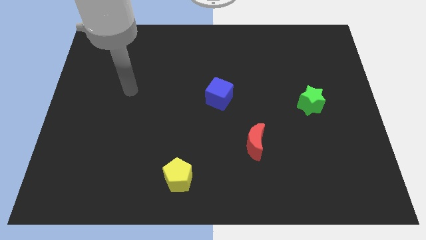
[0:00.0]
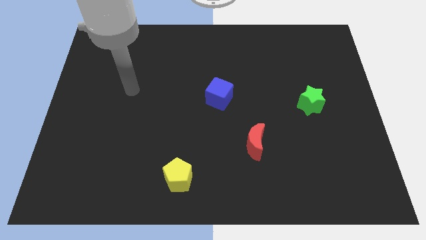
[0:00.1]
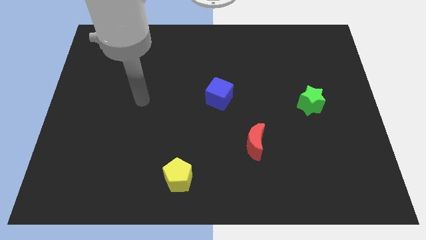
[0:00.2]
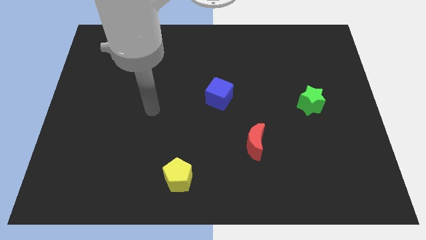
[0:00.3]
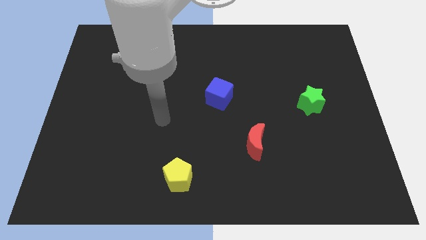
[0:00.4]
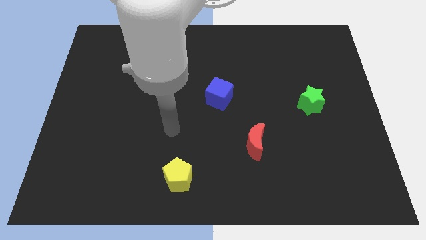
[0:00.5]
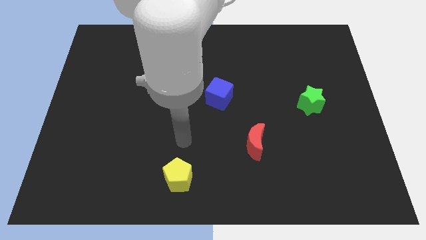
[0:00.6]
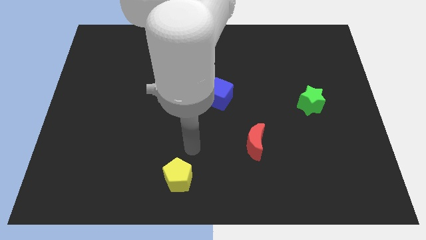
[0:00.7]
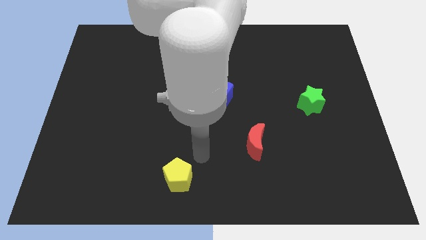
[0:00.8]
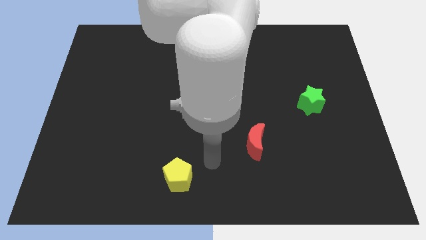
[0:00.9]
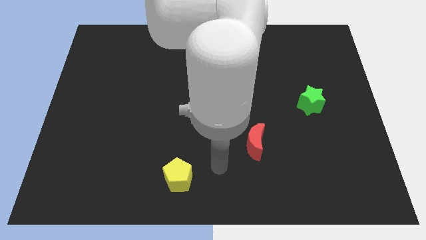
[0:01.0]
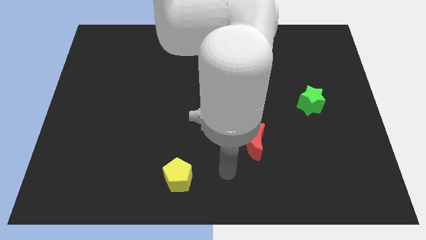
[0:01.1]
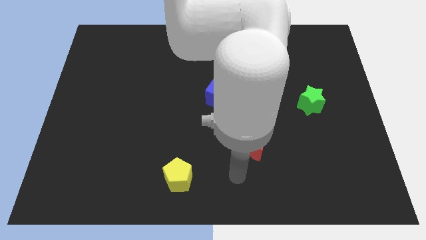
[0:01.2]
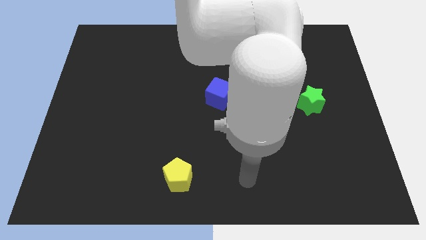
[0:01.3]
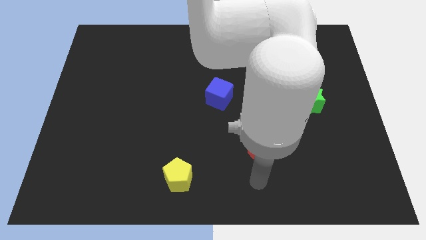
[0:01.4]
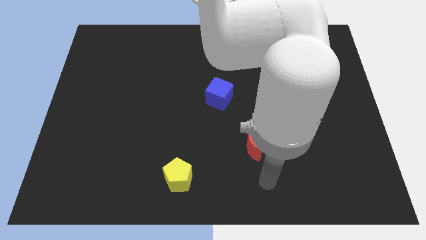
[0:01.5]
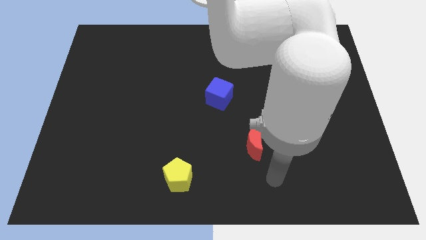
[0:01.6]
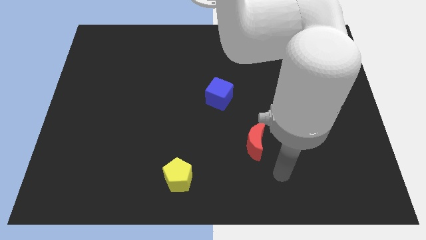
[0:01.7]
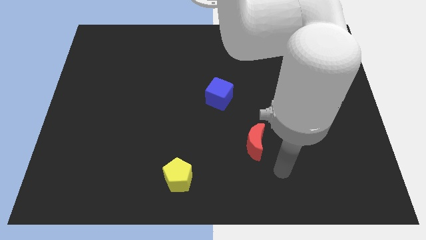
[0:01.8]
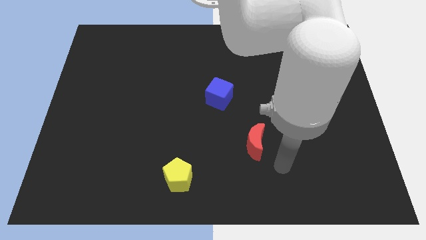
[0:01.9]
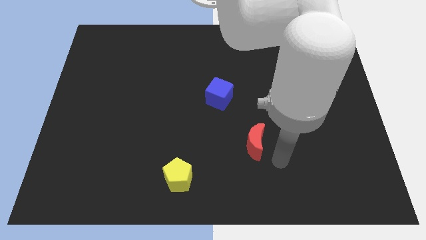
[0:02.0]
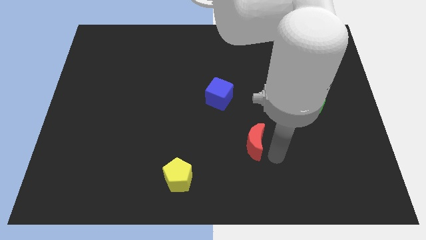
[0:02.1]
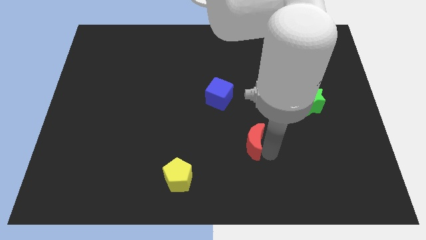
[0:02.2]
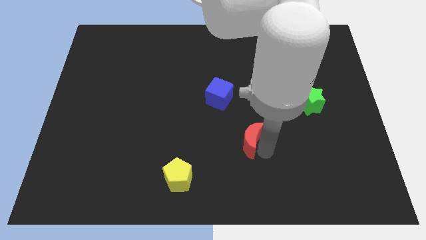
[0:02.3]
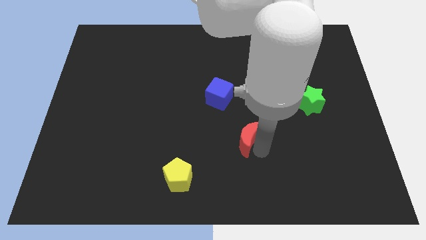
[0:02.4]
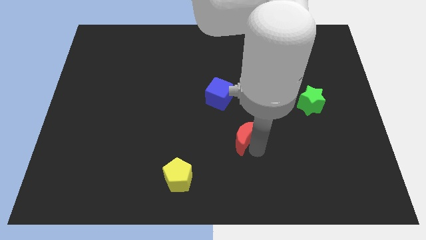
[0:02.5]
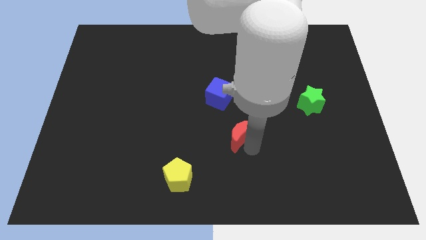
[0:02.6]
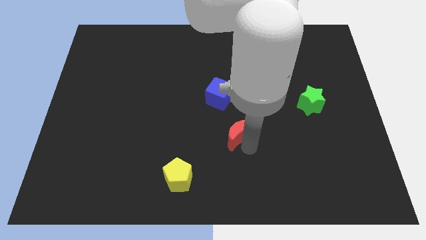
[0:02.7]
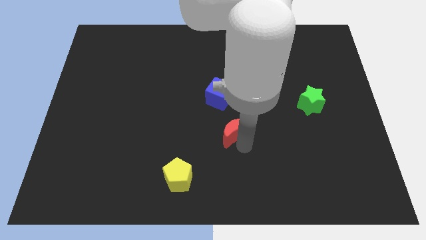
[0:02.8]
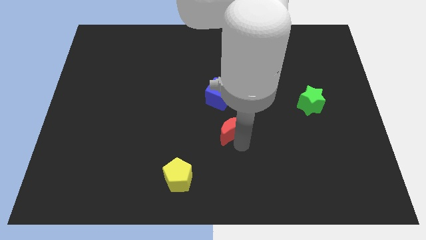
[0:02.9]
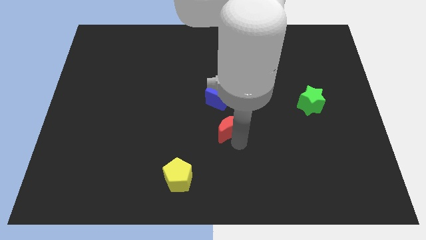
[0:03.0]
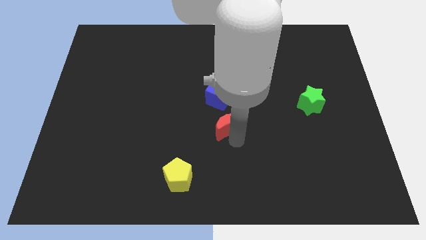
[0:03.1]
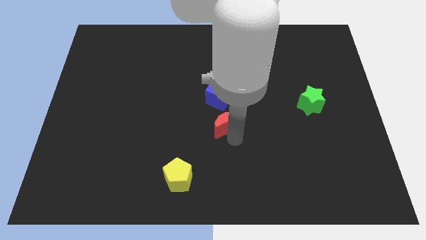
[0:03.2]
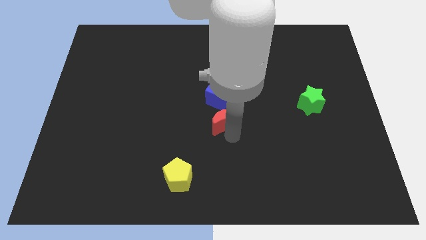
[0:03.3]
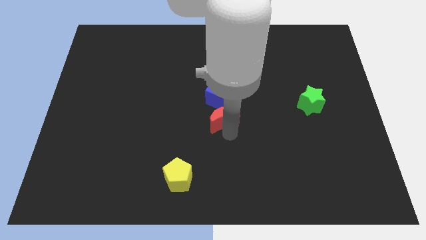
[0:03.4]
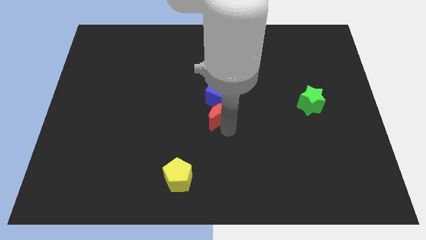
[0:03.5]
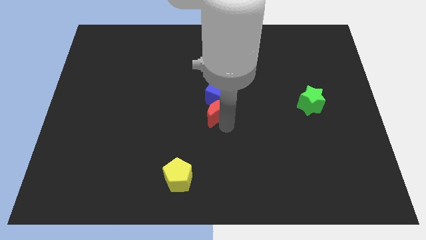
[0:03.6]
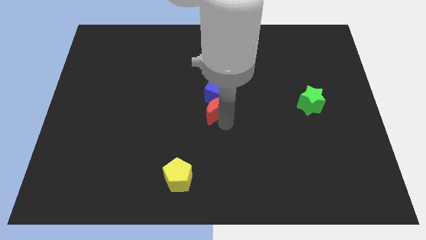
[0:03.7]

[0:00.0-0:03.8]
put the red moon close to the blue block

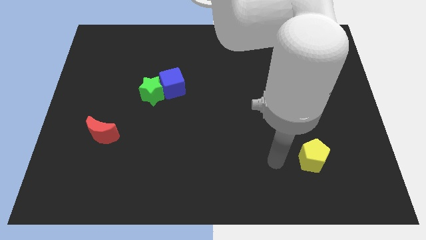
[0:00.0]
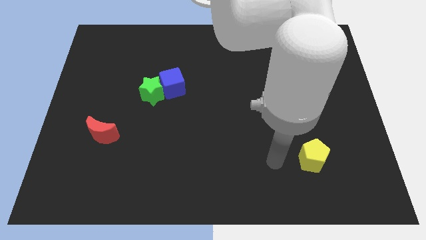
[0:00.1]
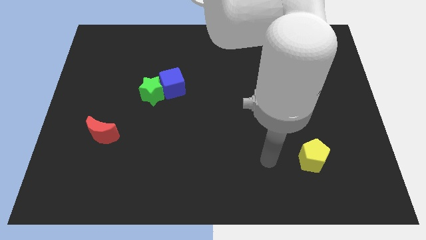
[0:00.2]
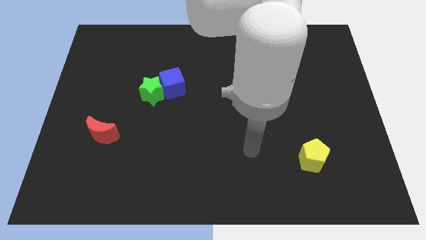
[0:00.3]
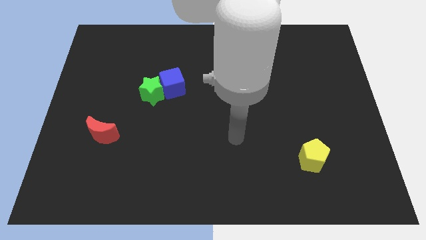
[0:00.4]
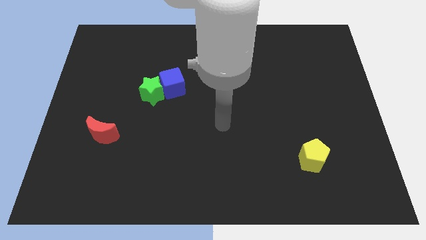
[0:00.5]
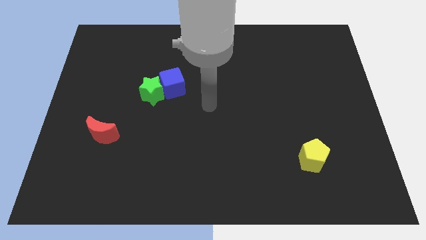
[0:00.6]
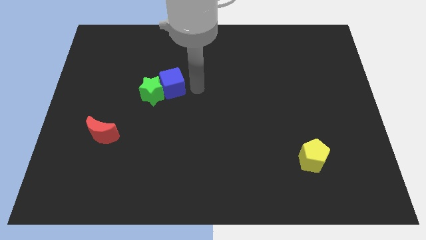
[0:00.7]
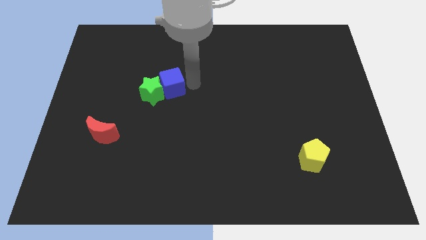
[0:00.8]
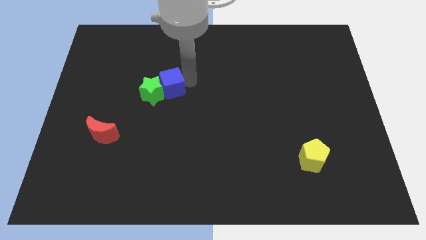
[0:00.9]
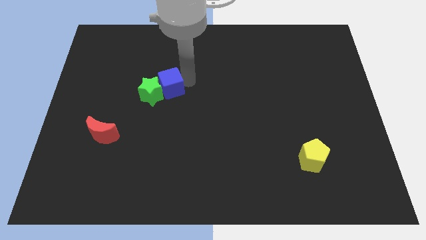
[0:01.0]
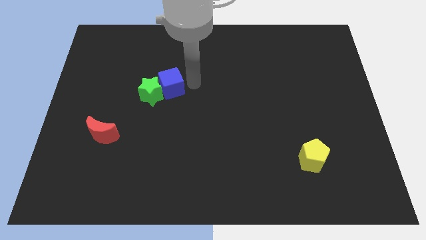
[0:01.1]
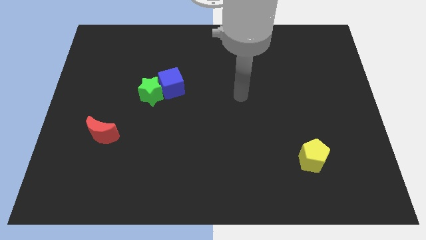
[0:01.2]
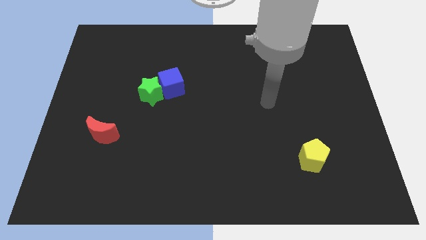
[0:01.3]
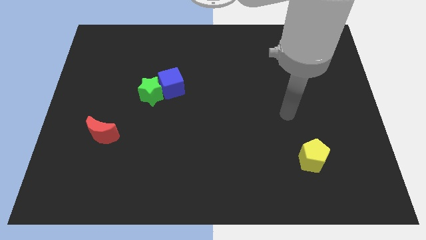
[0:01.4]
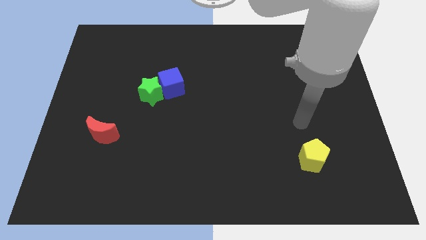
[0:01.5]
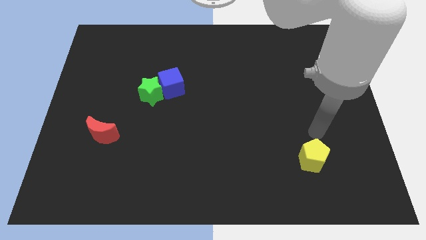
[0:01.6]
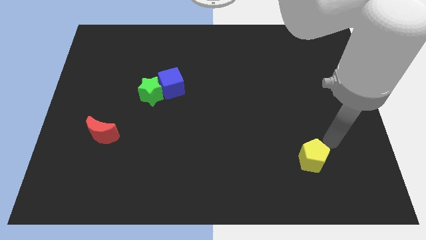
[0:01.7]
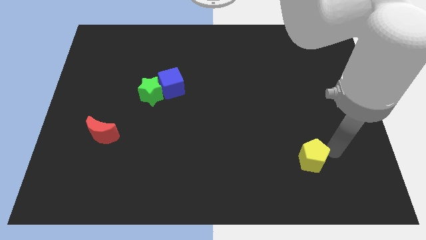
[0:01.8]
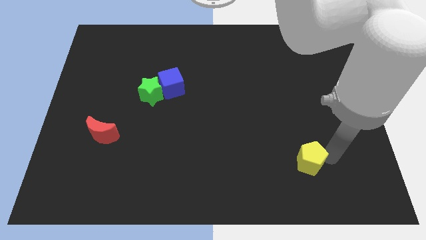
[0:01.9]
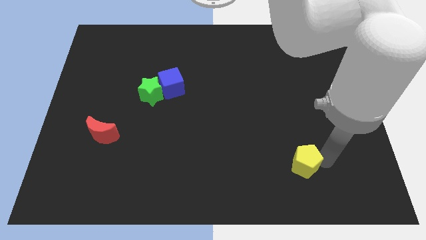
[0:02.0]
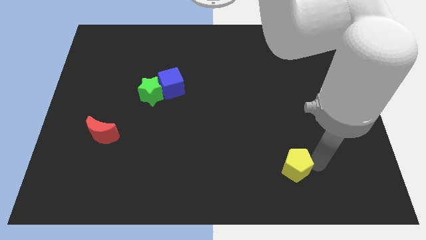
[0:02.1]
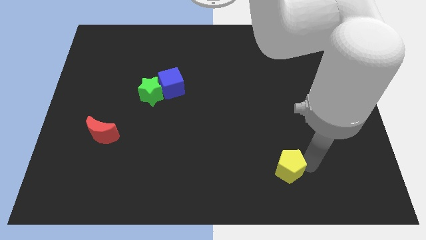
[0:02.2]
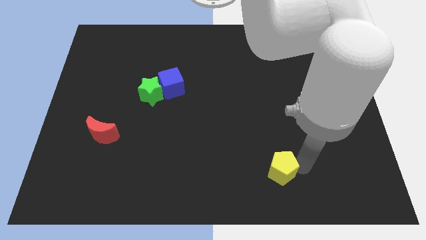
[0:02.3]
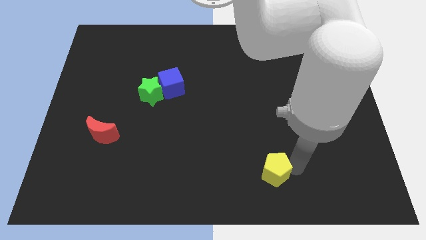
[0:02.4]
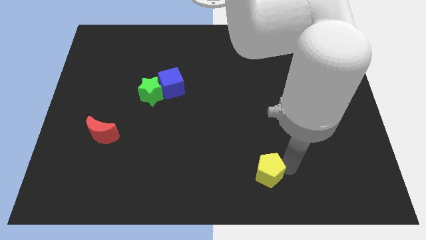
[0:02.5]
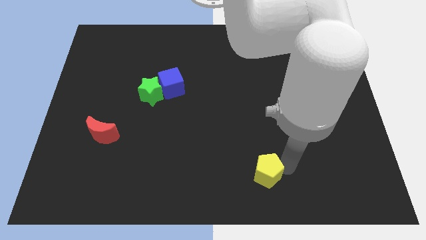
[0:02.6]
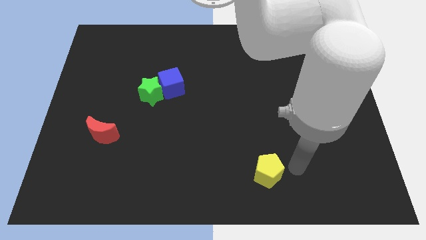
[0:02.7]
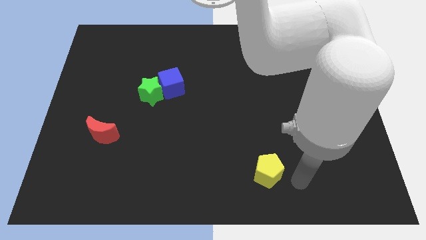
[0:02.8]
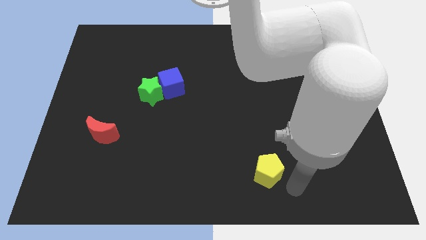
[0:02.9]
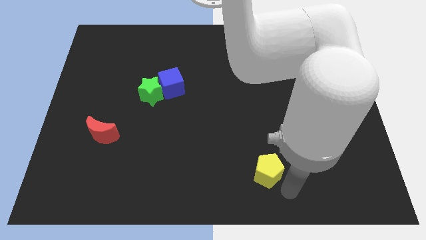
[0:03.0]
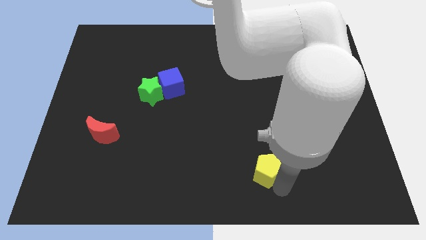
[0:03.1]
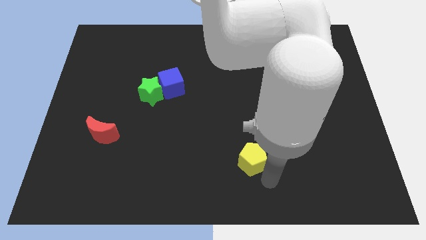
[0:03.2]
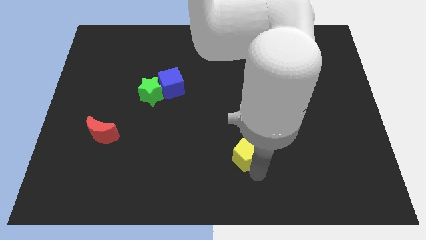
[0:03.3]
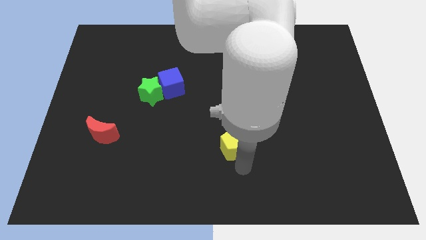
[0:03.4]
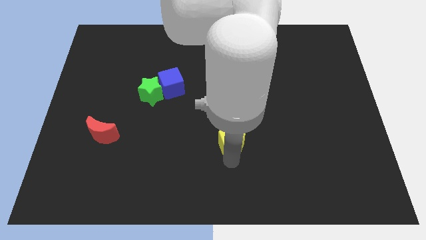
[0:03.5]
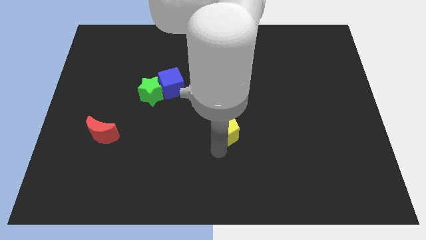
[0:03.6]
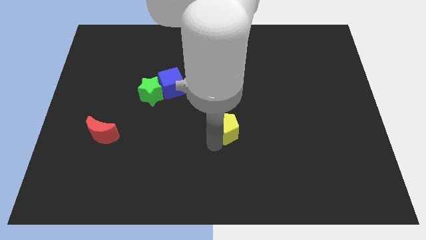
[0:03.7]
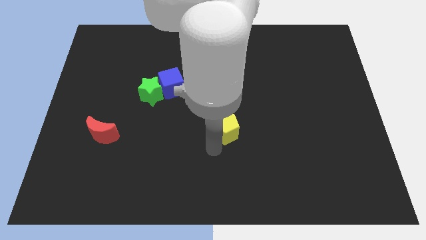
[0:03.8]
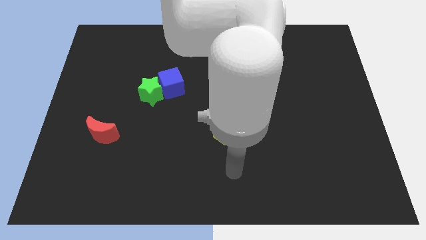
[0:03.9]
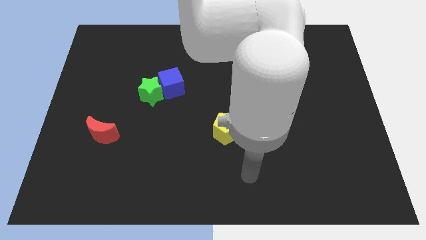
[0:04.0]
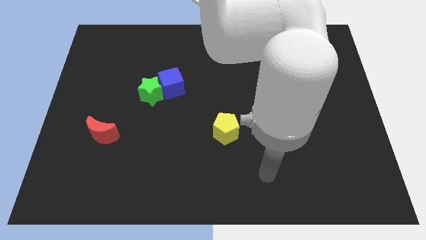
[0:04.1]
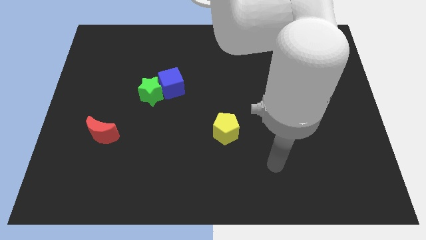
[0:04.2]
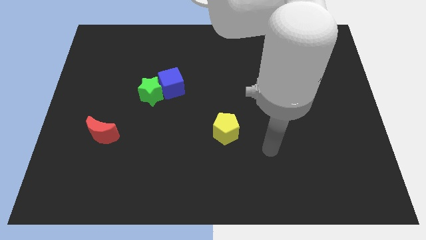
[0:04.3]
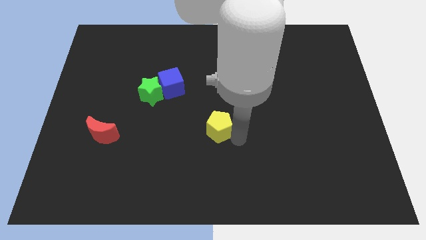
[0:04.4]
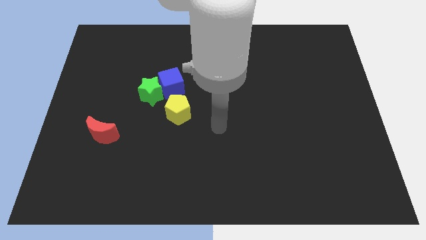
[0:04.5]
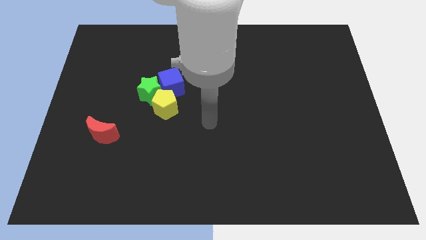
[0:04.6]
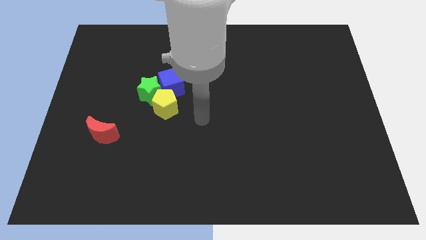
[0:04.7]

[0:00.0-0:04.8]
put the pentagon to the green block
